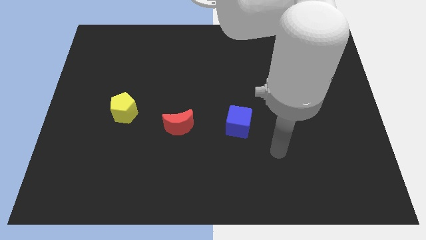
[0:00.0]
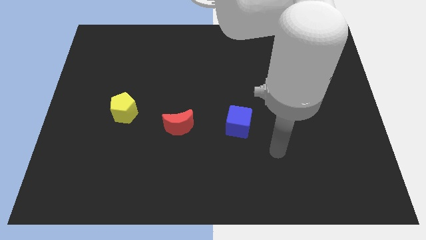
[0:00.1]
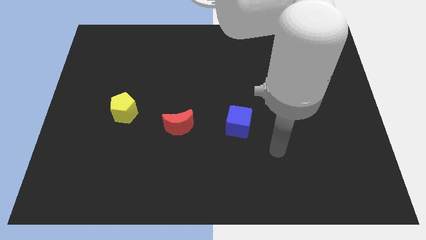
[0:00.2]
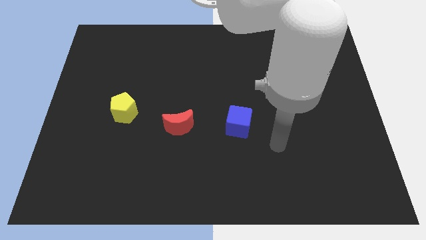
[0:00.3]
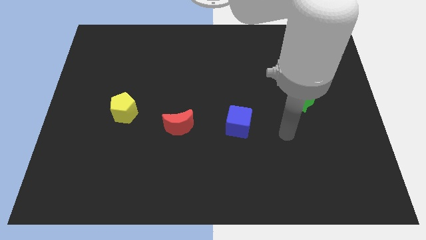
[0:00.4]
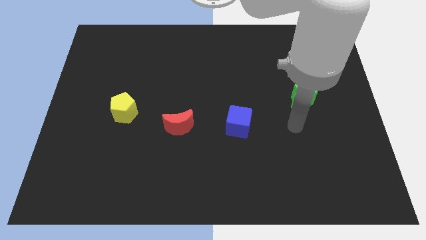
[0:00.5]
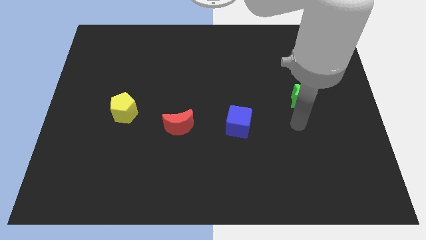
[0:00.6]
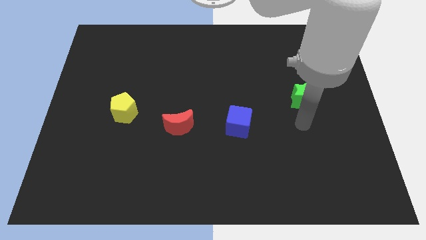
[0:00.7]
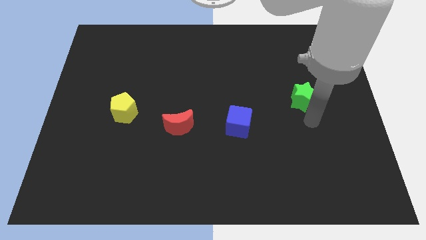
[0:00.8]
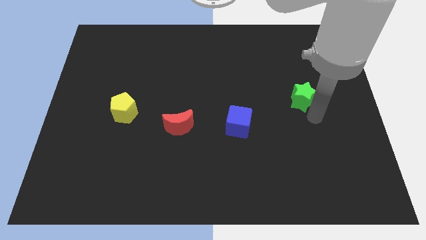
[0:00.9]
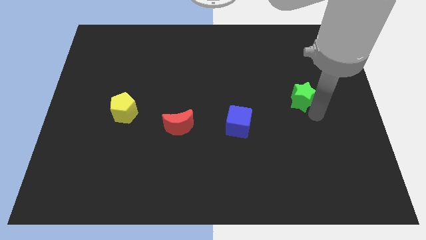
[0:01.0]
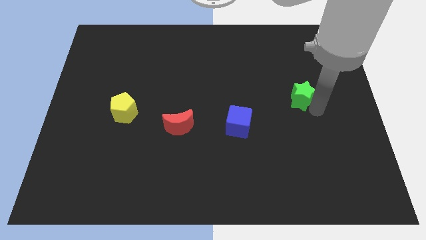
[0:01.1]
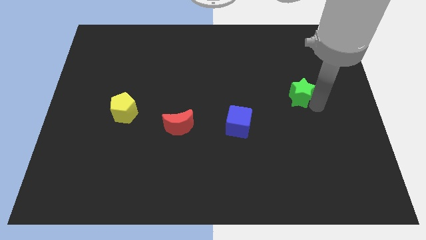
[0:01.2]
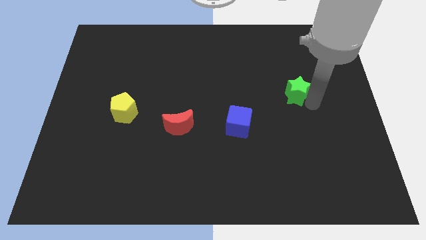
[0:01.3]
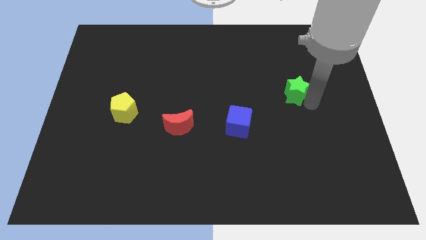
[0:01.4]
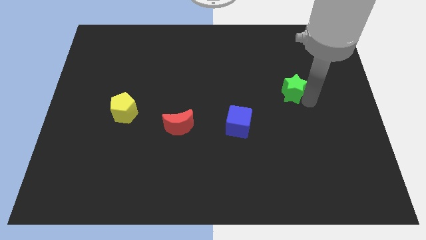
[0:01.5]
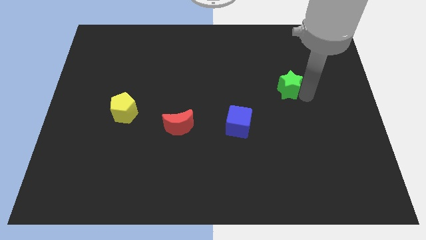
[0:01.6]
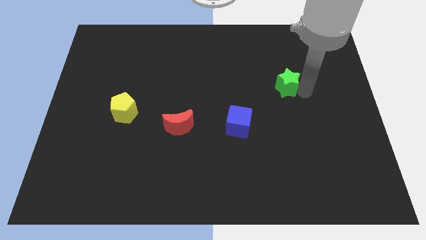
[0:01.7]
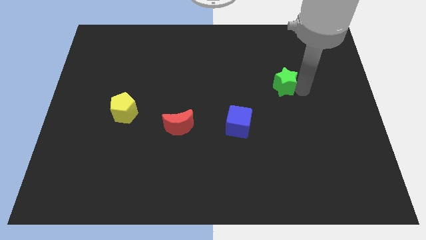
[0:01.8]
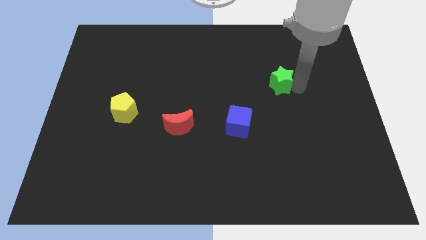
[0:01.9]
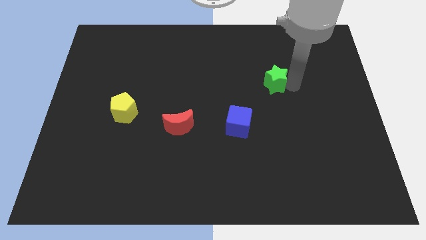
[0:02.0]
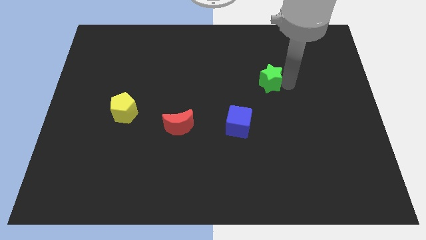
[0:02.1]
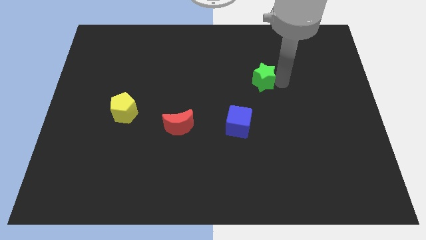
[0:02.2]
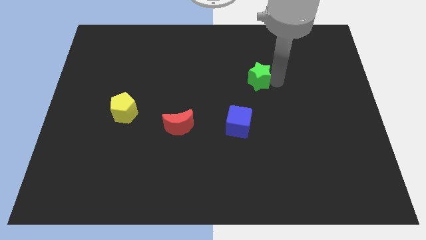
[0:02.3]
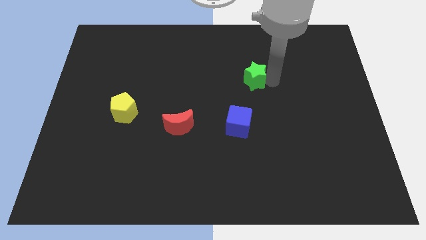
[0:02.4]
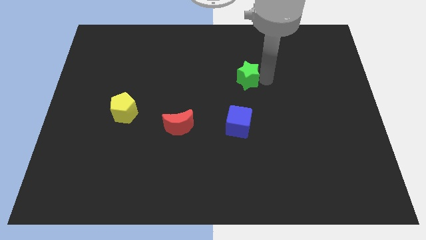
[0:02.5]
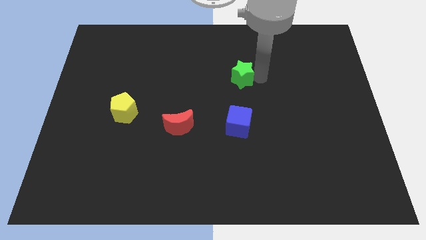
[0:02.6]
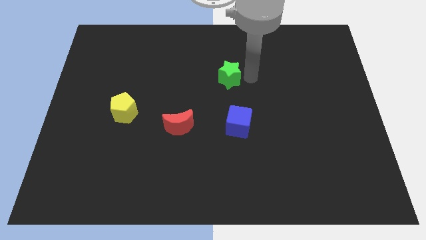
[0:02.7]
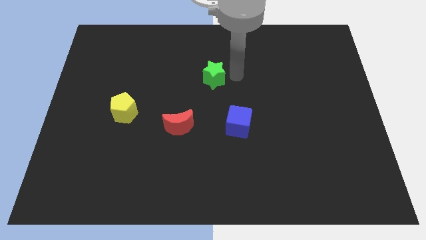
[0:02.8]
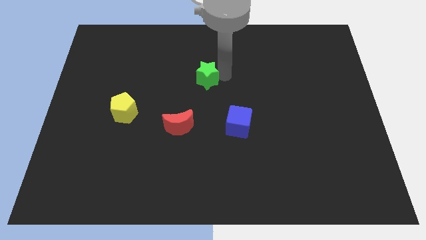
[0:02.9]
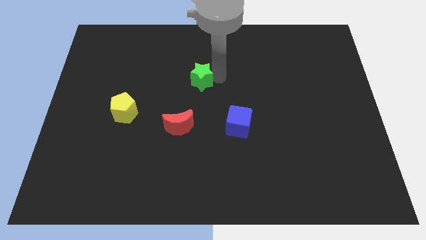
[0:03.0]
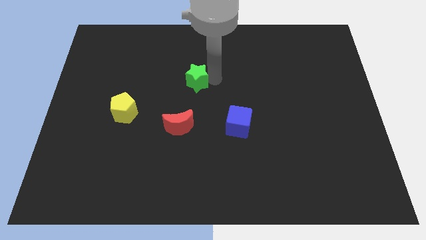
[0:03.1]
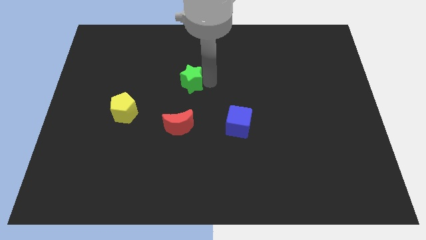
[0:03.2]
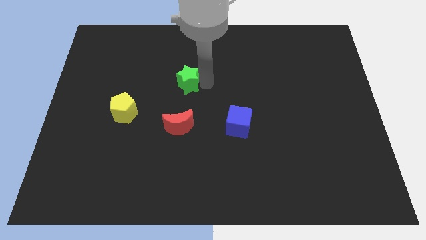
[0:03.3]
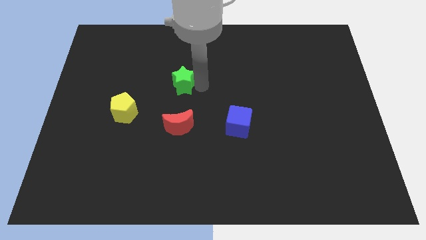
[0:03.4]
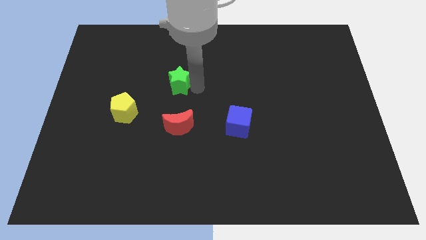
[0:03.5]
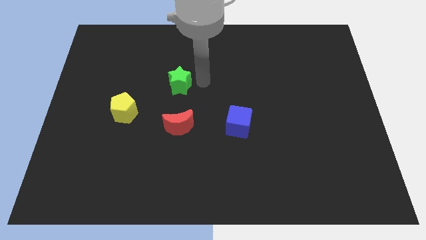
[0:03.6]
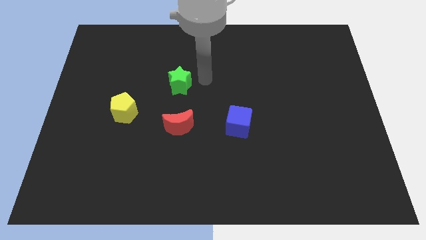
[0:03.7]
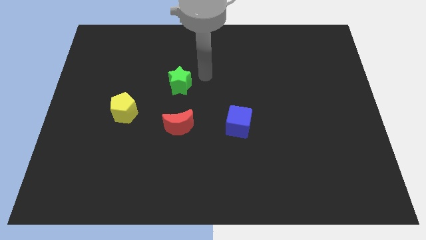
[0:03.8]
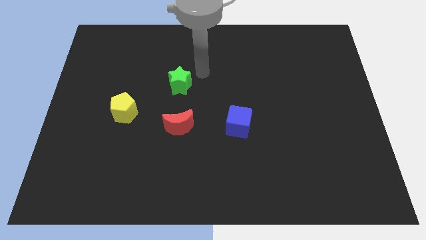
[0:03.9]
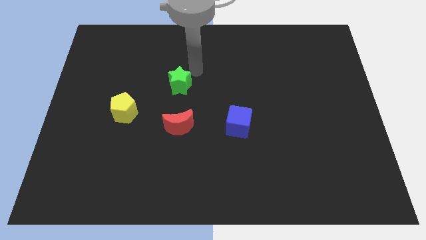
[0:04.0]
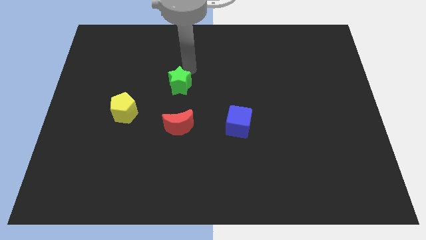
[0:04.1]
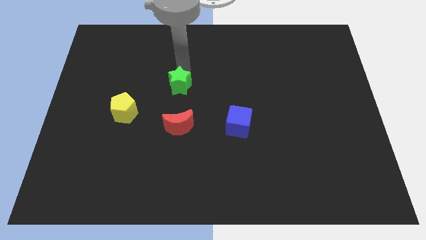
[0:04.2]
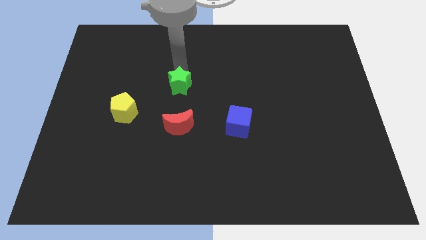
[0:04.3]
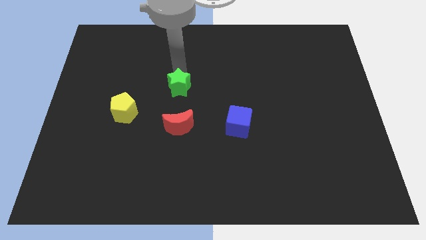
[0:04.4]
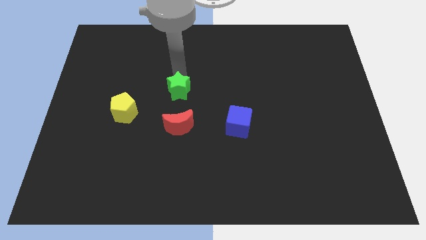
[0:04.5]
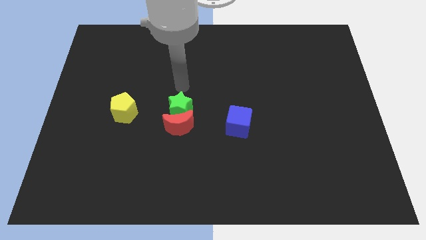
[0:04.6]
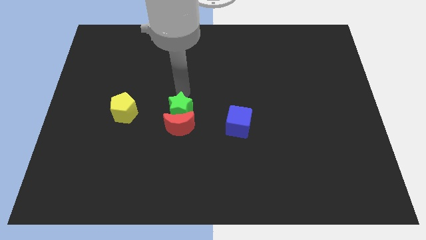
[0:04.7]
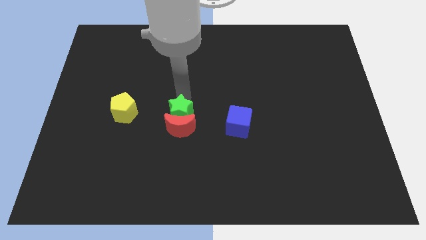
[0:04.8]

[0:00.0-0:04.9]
slide the green star towards the red moon

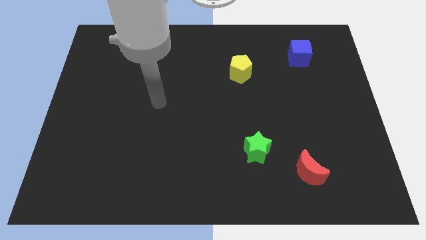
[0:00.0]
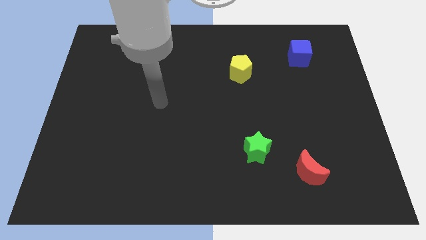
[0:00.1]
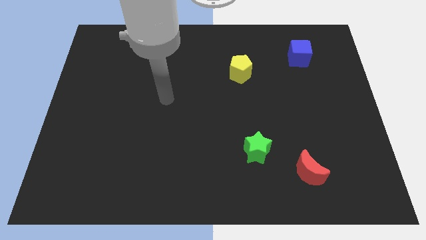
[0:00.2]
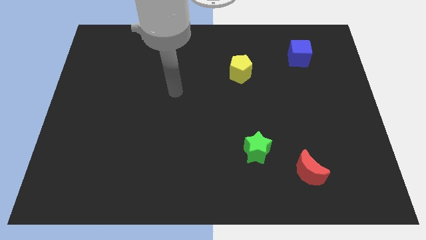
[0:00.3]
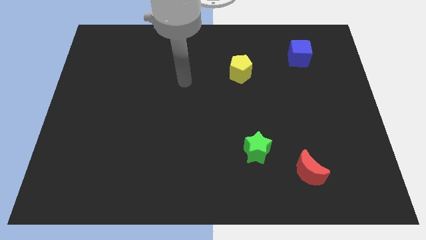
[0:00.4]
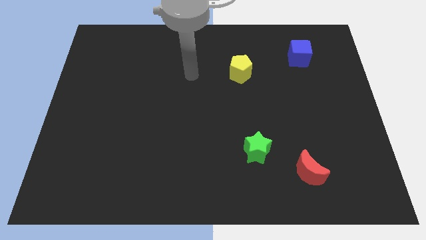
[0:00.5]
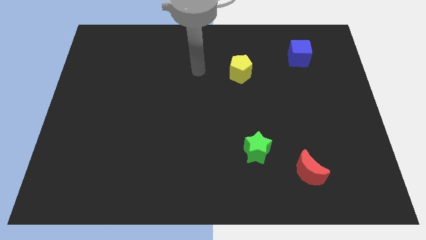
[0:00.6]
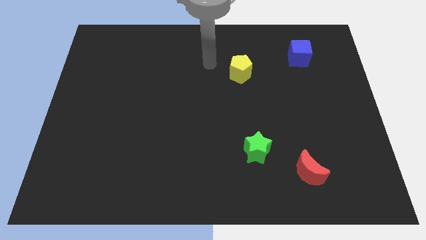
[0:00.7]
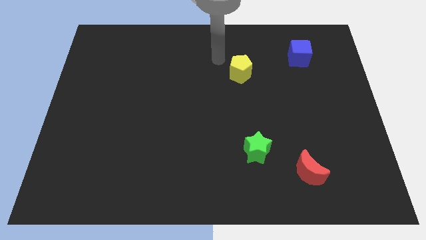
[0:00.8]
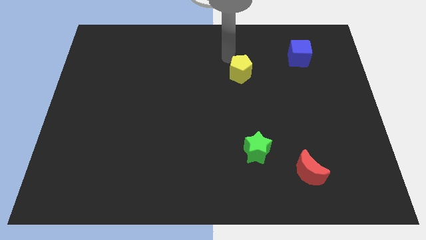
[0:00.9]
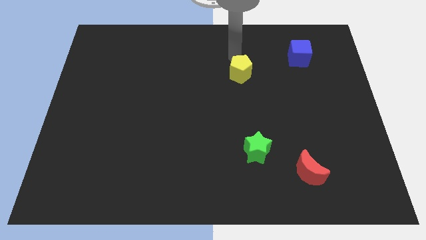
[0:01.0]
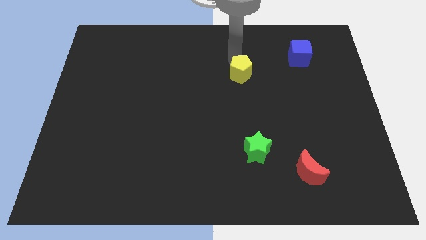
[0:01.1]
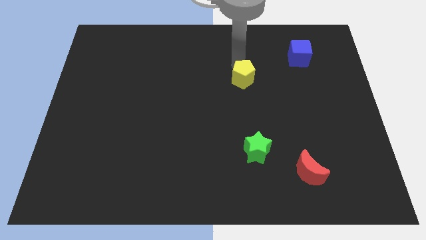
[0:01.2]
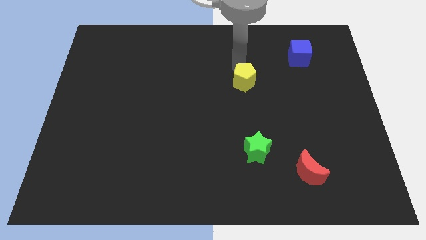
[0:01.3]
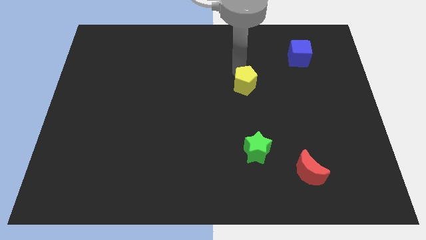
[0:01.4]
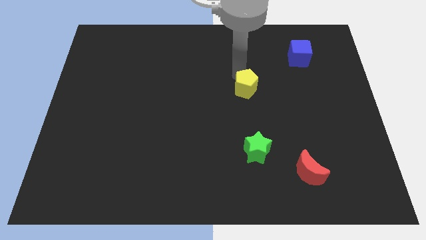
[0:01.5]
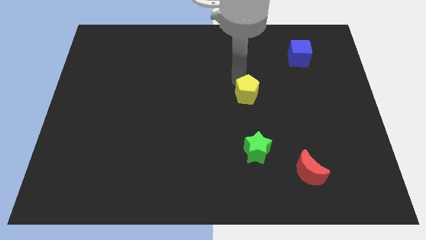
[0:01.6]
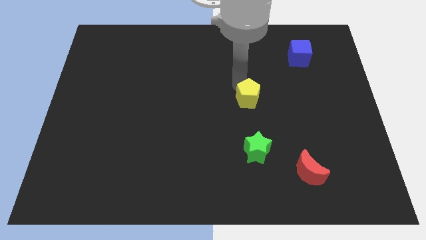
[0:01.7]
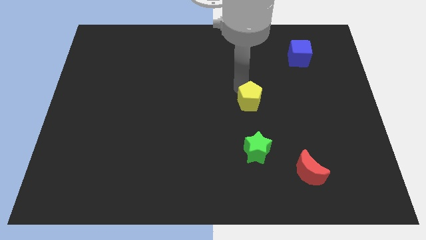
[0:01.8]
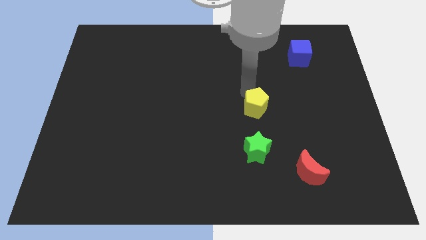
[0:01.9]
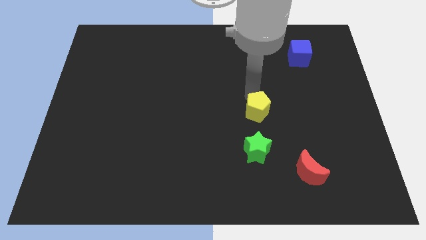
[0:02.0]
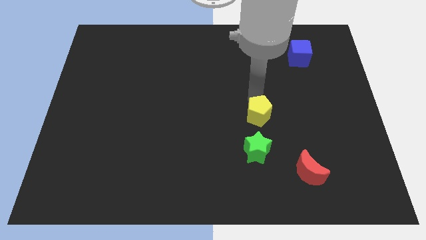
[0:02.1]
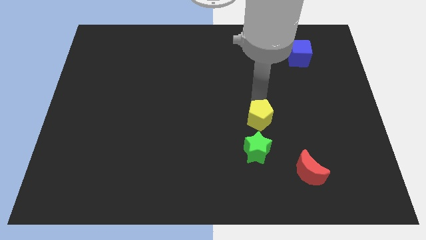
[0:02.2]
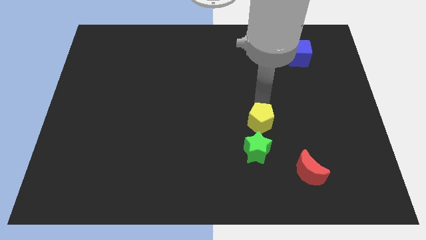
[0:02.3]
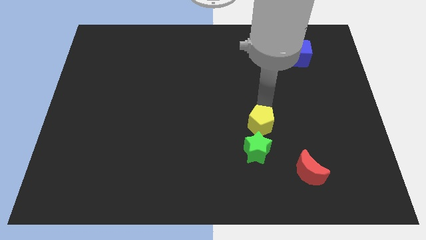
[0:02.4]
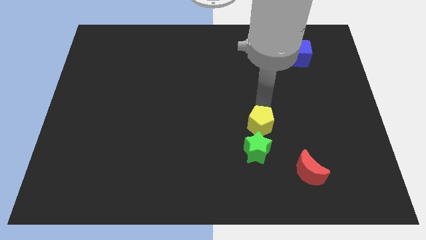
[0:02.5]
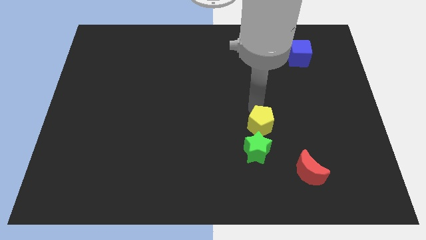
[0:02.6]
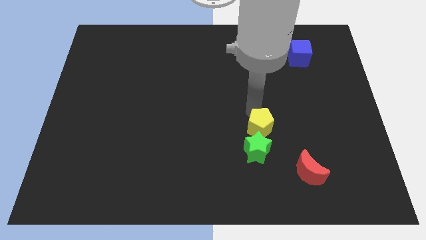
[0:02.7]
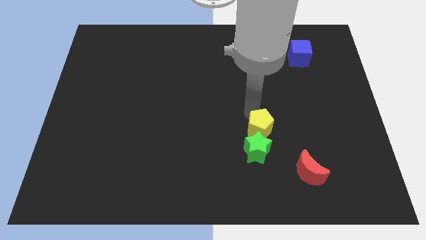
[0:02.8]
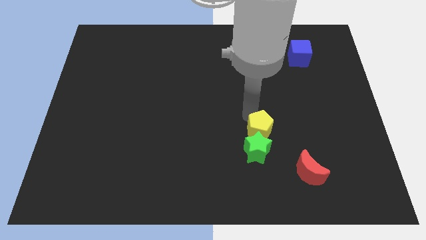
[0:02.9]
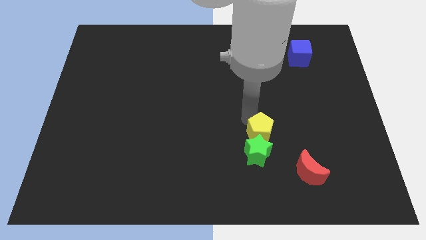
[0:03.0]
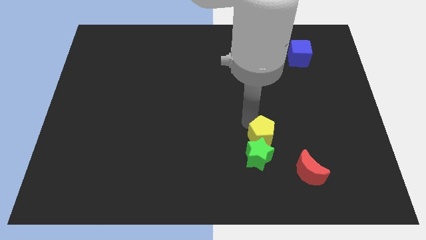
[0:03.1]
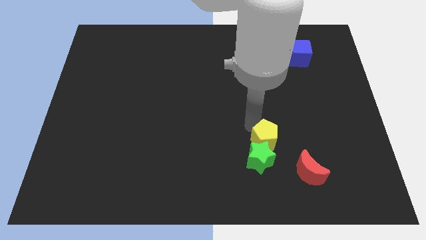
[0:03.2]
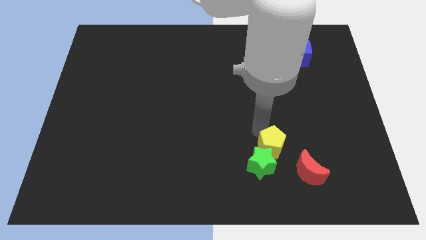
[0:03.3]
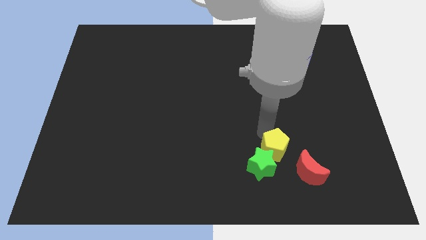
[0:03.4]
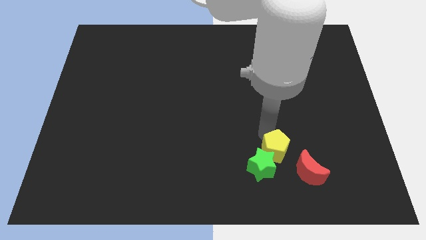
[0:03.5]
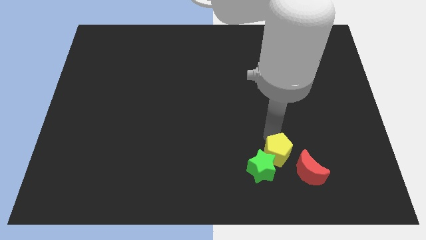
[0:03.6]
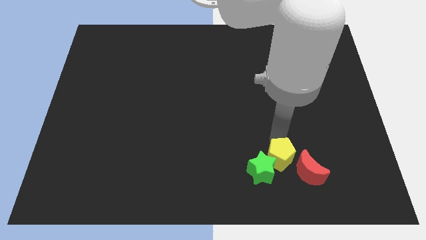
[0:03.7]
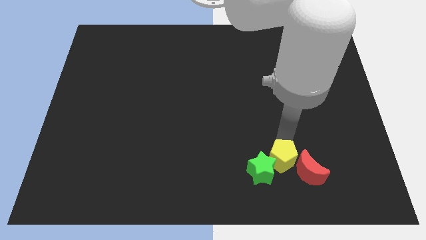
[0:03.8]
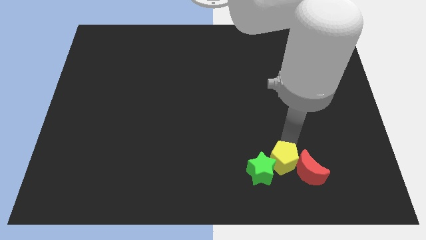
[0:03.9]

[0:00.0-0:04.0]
move the yellow pentagon to the red block
